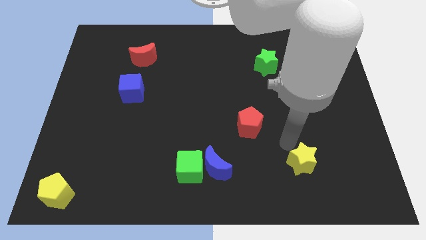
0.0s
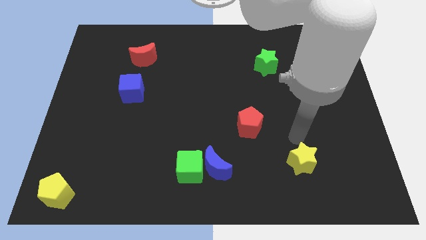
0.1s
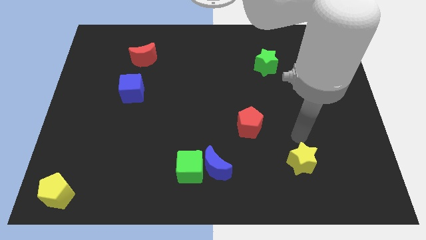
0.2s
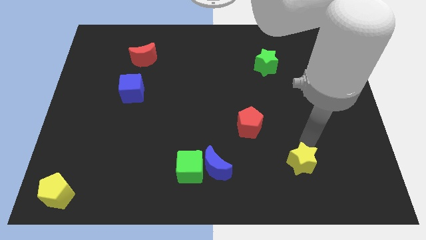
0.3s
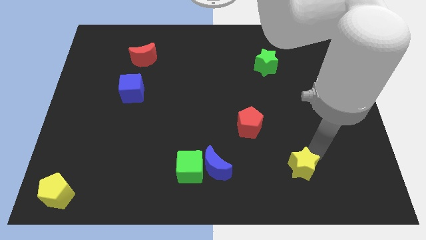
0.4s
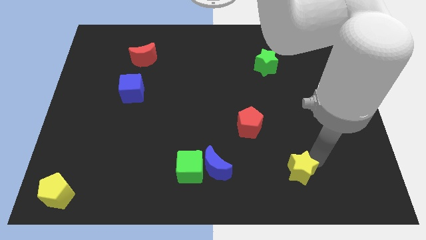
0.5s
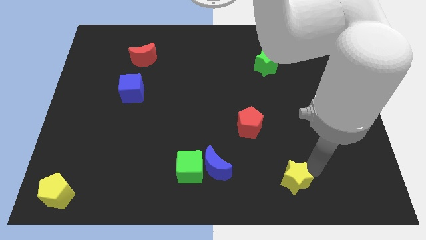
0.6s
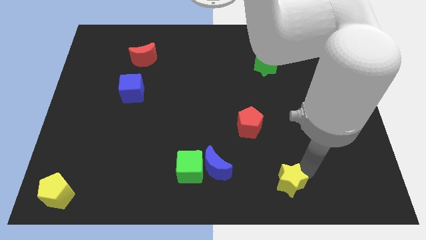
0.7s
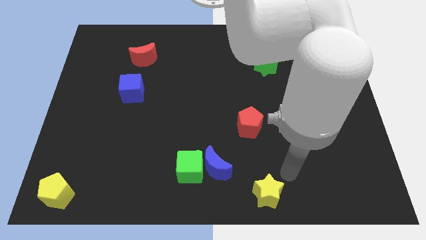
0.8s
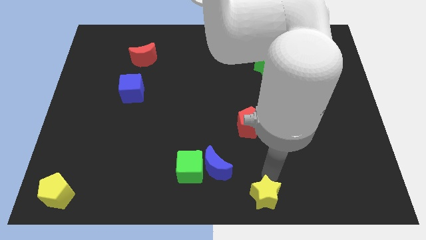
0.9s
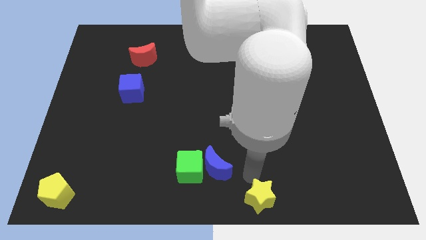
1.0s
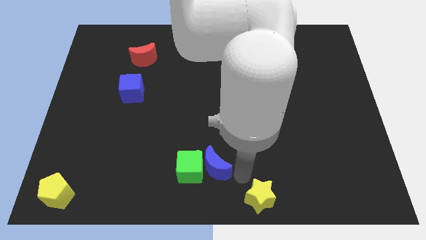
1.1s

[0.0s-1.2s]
move yellow star to the bottom center

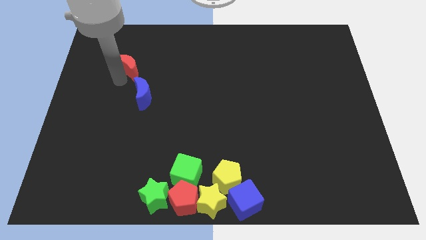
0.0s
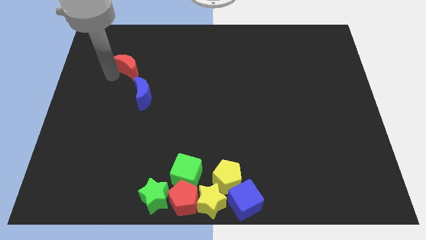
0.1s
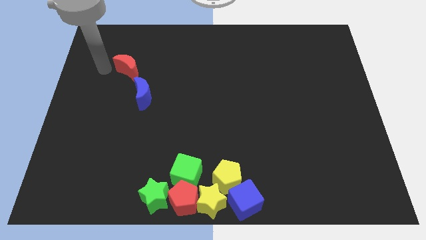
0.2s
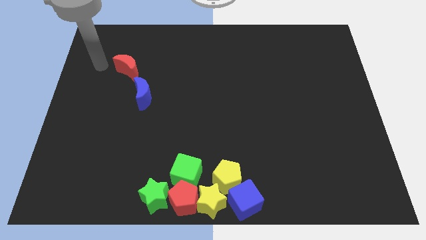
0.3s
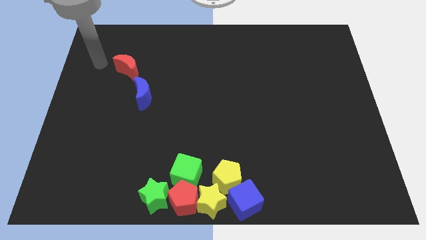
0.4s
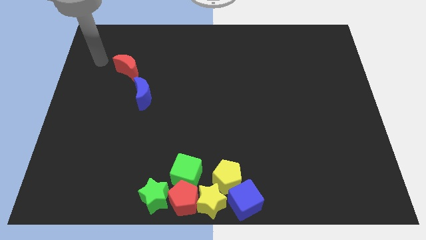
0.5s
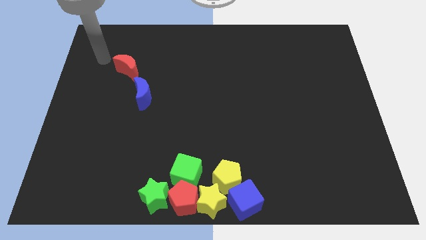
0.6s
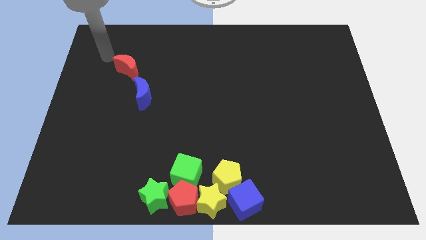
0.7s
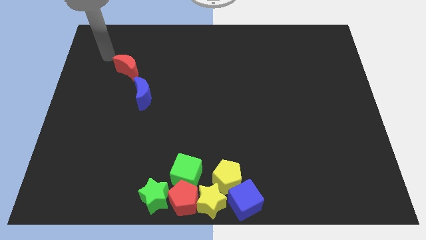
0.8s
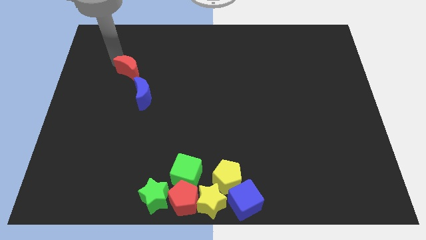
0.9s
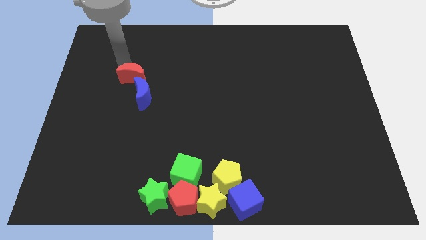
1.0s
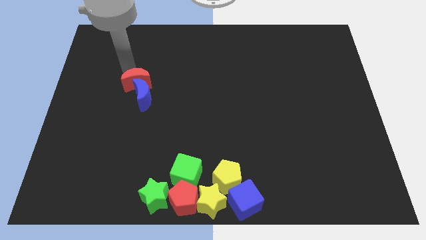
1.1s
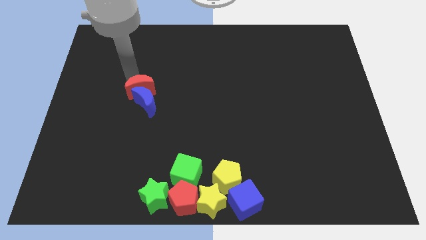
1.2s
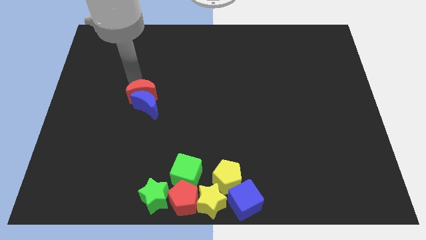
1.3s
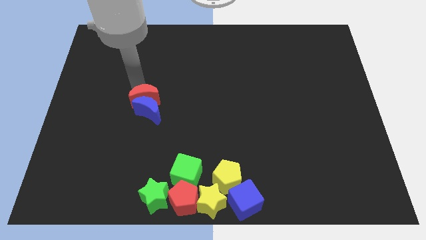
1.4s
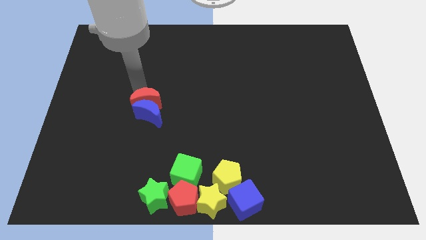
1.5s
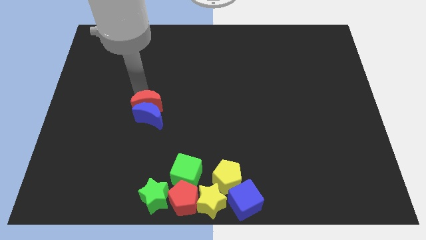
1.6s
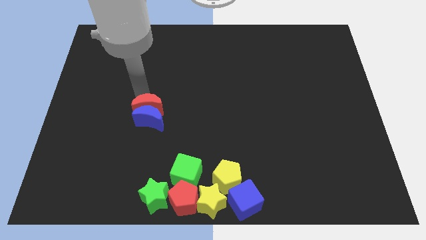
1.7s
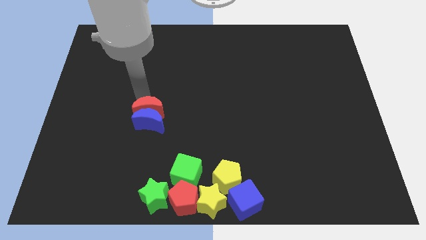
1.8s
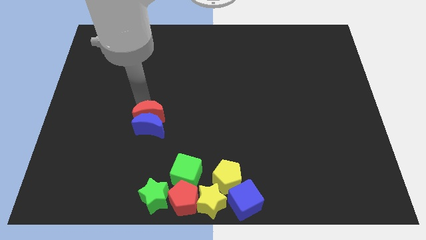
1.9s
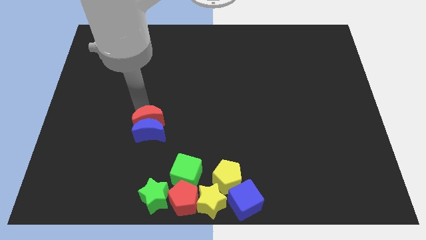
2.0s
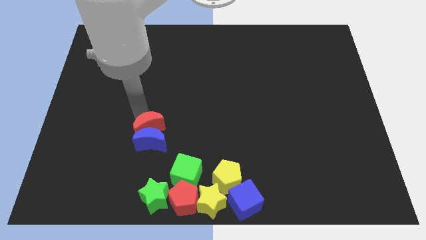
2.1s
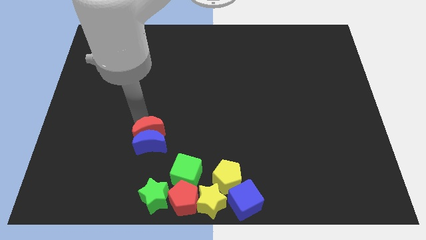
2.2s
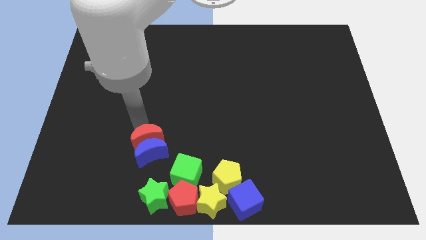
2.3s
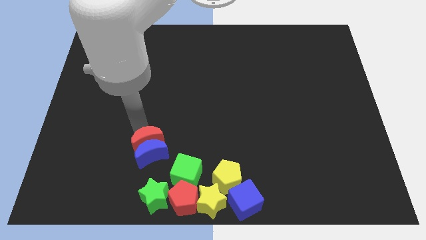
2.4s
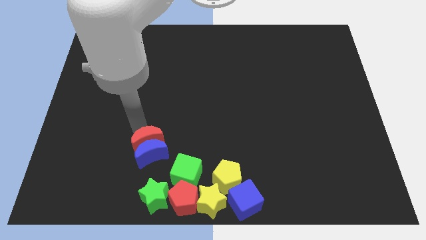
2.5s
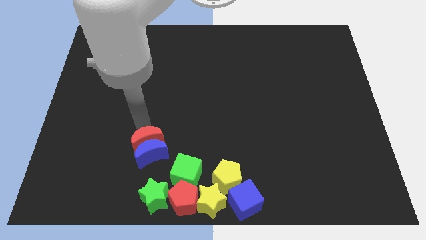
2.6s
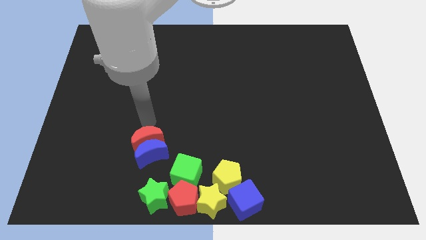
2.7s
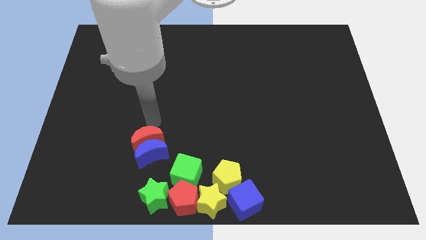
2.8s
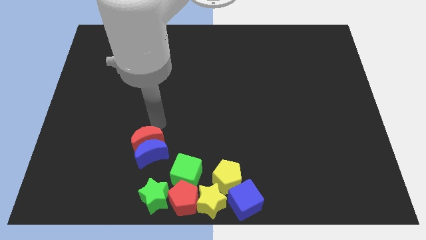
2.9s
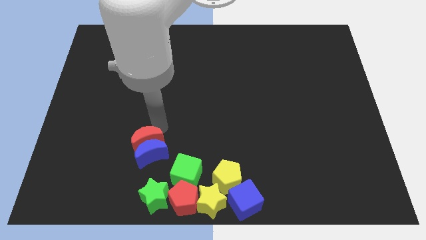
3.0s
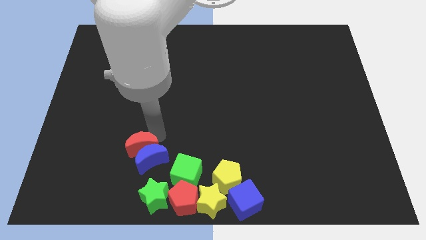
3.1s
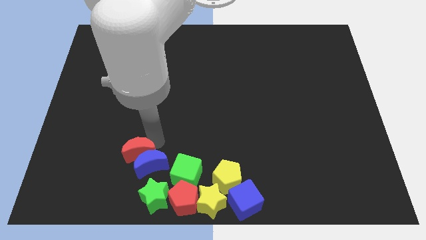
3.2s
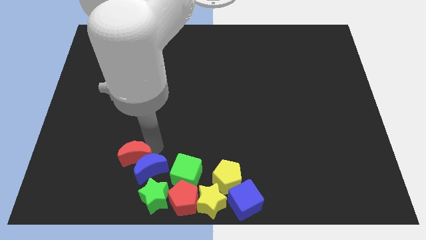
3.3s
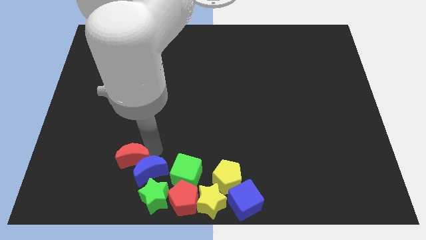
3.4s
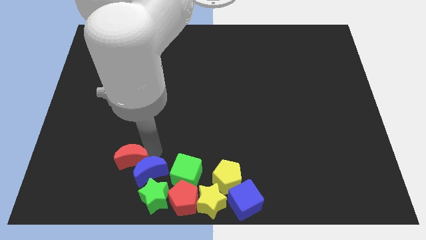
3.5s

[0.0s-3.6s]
push the red moon along with the blue moon to the bottom side of the board

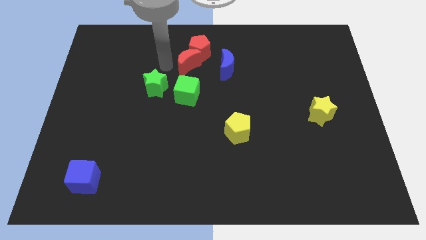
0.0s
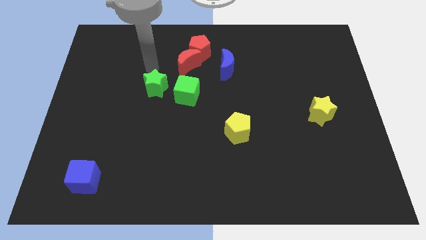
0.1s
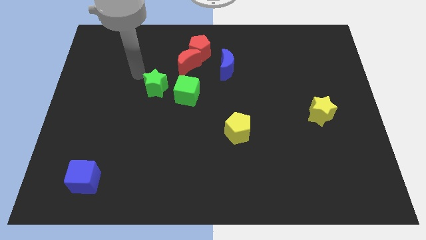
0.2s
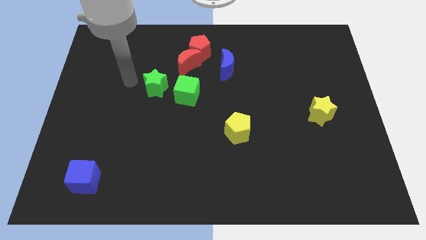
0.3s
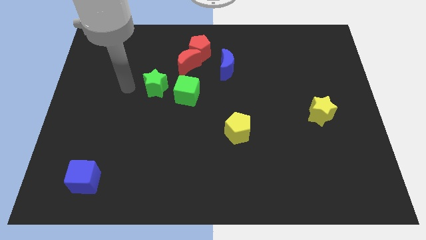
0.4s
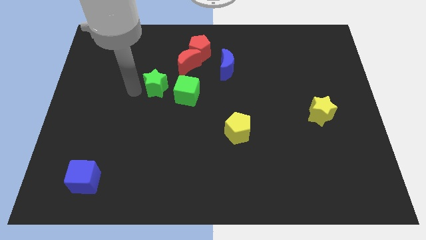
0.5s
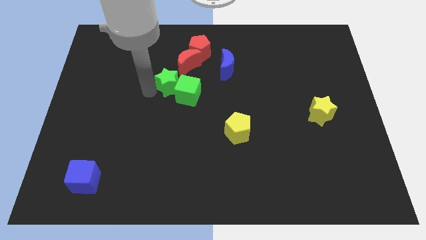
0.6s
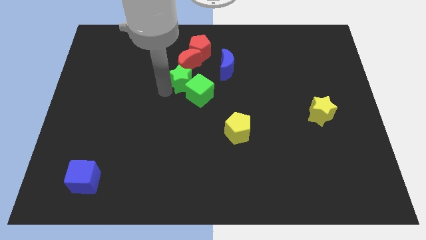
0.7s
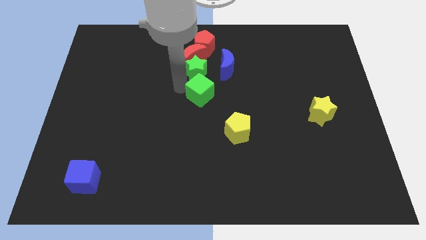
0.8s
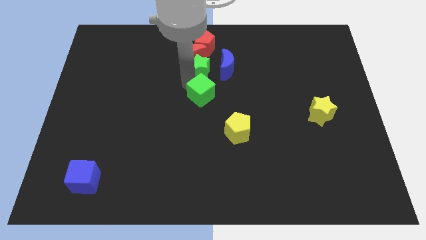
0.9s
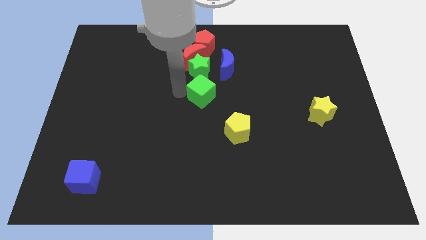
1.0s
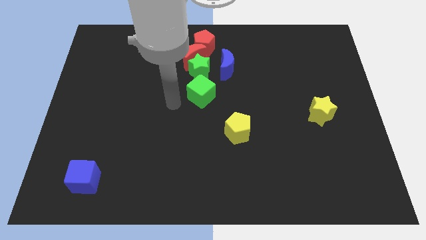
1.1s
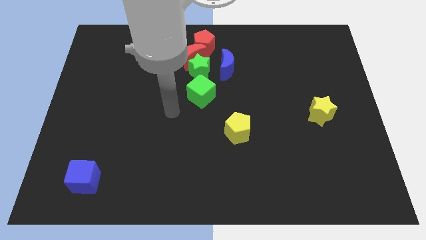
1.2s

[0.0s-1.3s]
place the green star above to the green cube

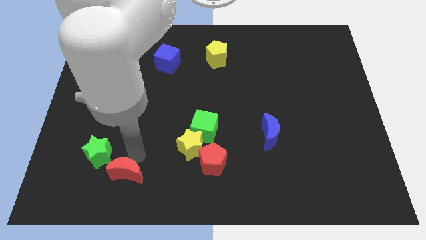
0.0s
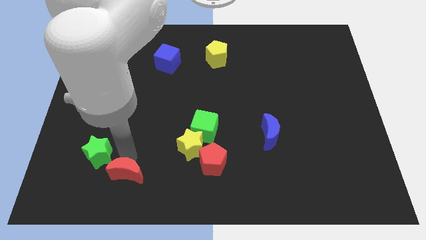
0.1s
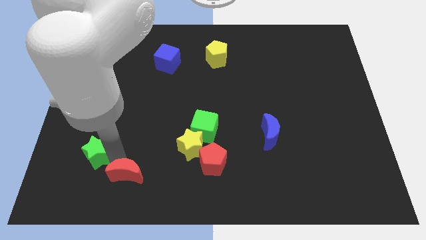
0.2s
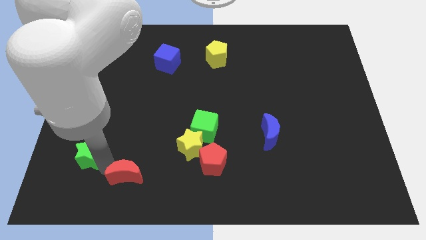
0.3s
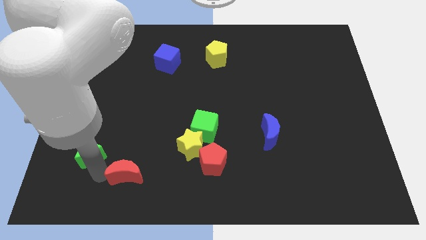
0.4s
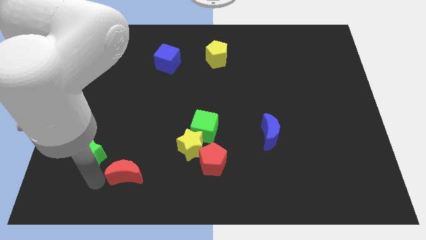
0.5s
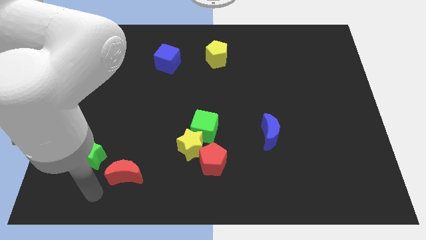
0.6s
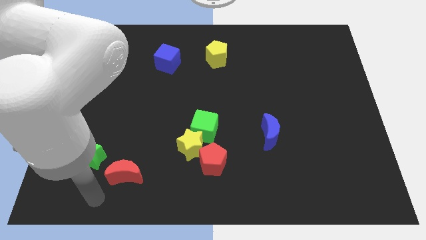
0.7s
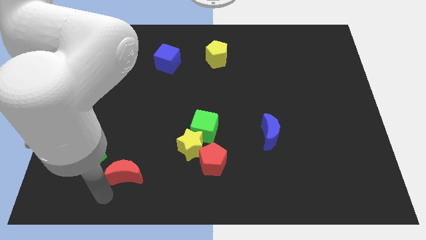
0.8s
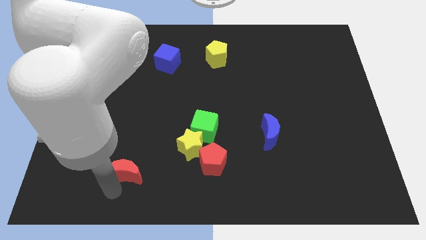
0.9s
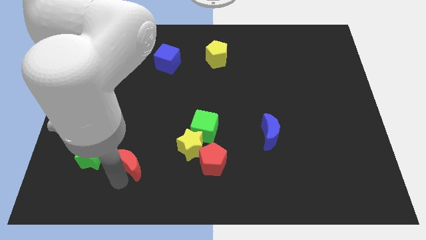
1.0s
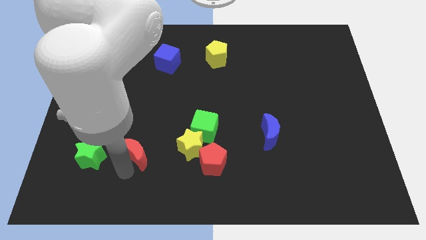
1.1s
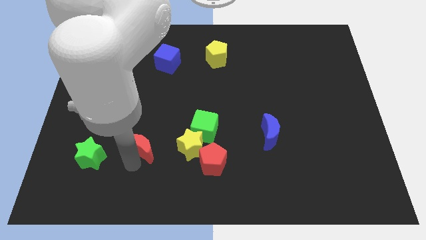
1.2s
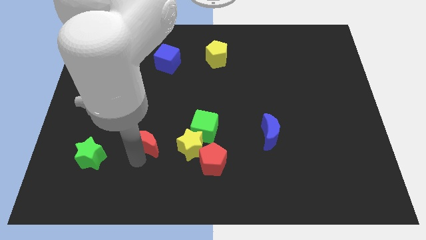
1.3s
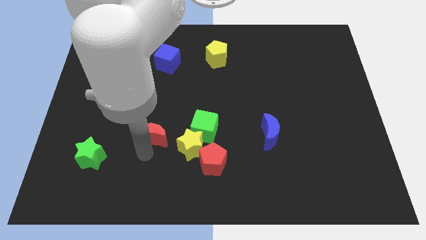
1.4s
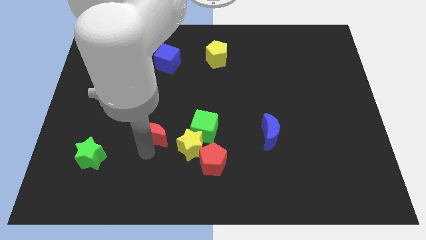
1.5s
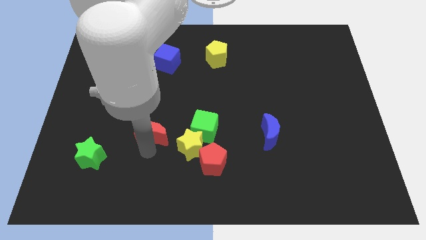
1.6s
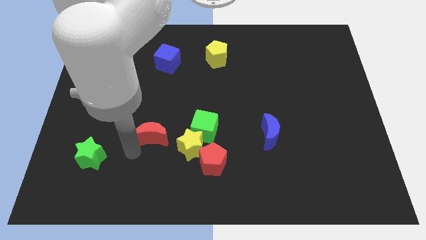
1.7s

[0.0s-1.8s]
separate the red crescent and the green star

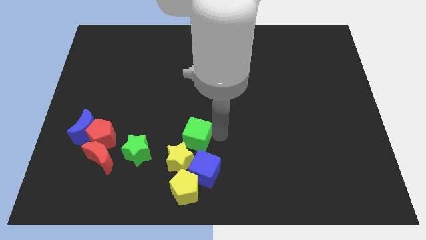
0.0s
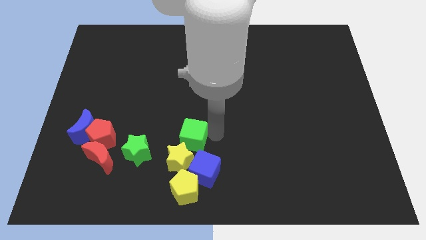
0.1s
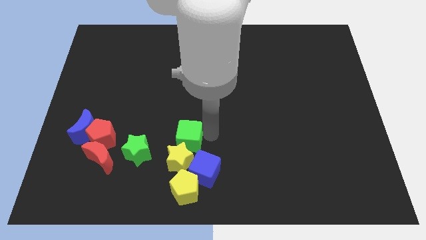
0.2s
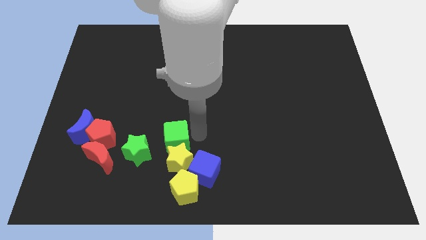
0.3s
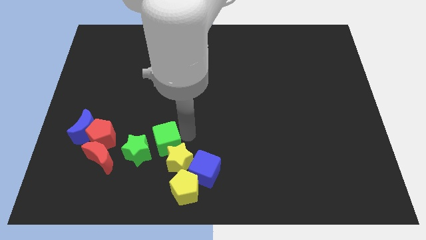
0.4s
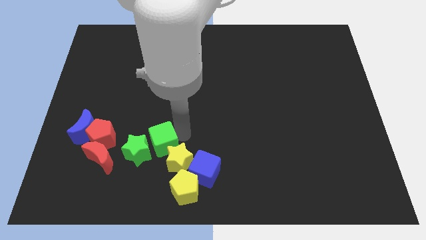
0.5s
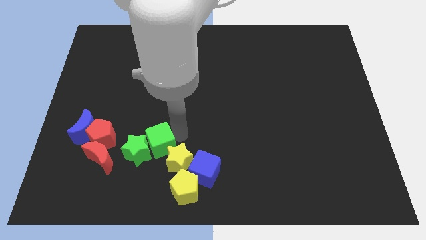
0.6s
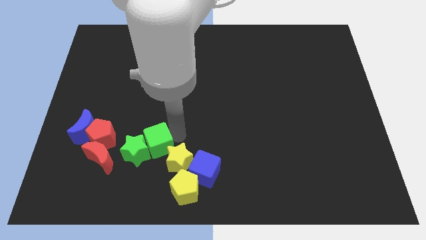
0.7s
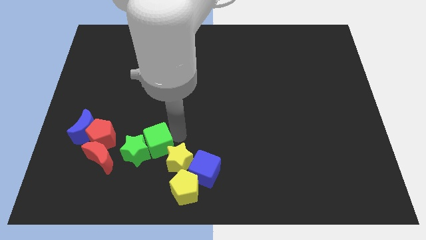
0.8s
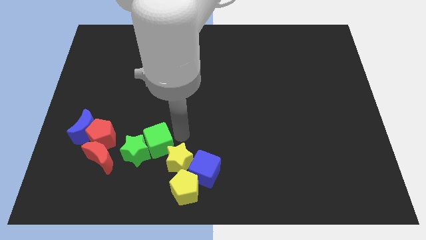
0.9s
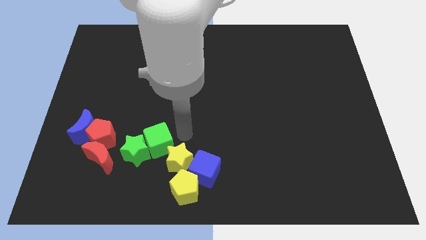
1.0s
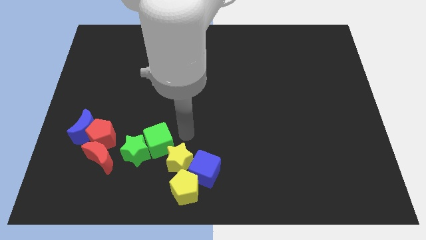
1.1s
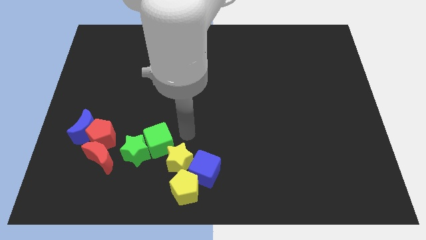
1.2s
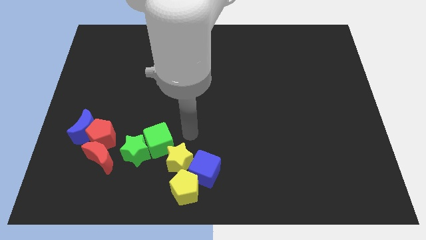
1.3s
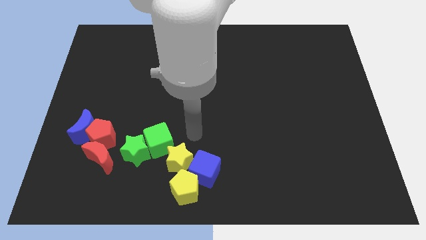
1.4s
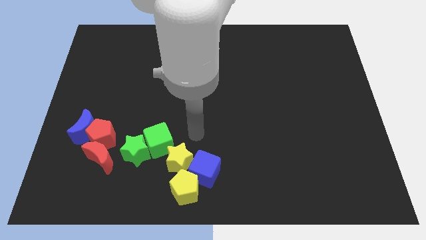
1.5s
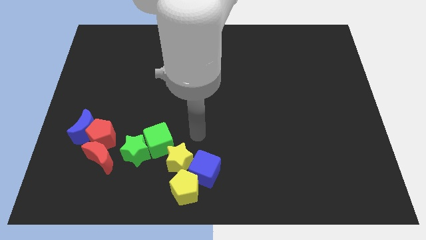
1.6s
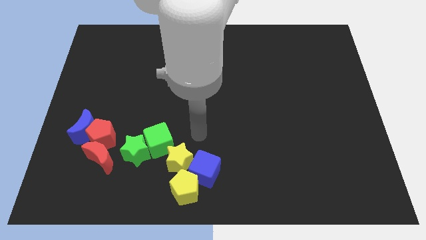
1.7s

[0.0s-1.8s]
move the green cube into the green star
